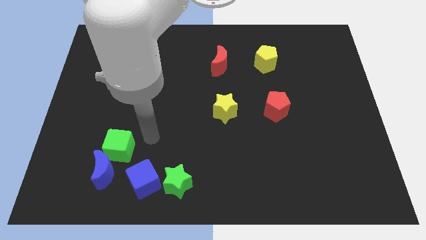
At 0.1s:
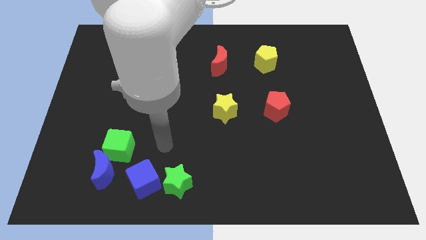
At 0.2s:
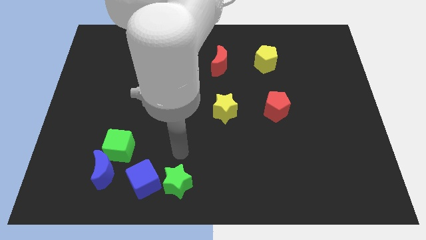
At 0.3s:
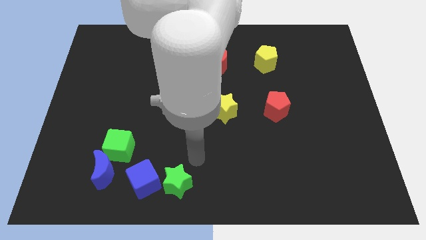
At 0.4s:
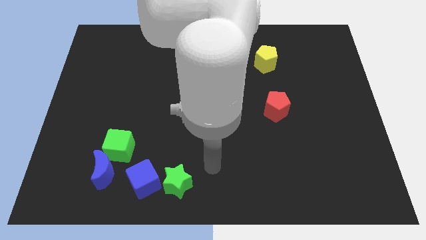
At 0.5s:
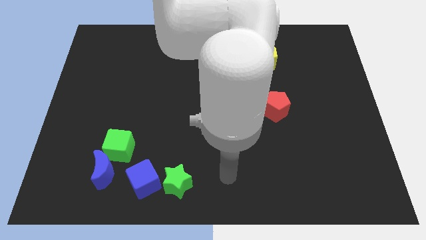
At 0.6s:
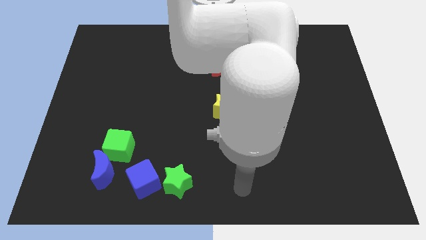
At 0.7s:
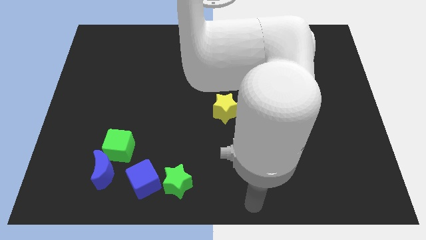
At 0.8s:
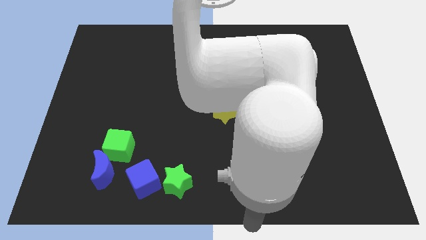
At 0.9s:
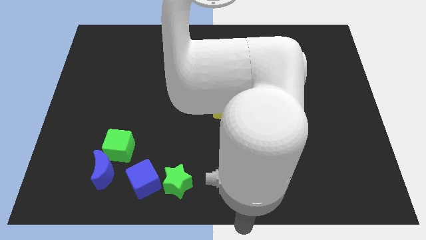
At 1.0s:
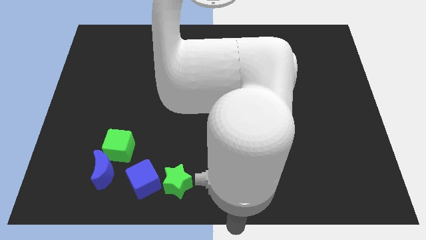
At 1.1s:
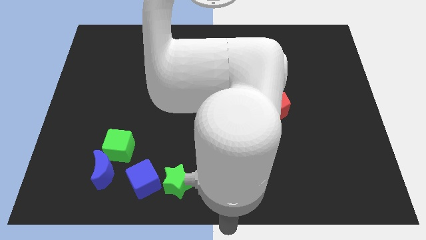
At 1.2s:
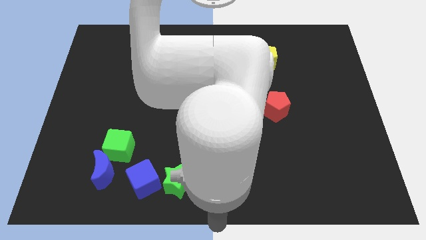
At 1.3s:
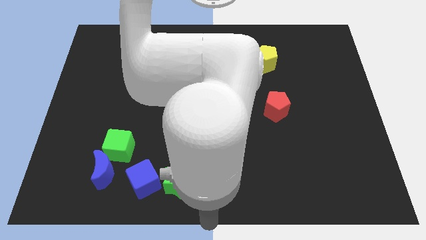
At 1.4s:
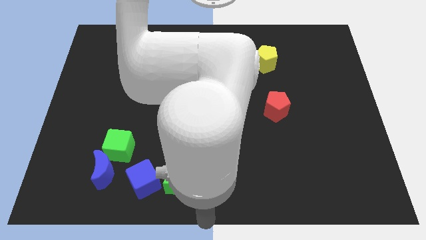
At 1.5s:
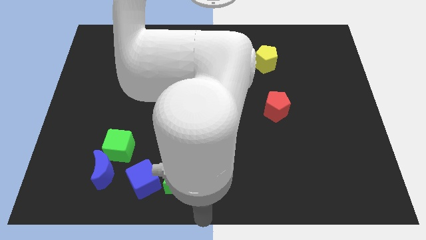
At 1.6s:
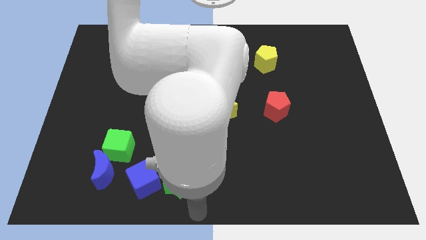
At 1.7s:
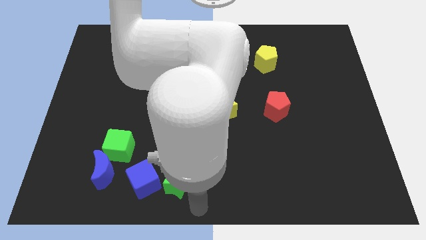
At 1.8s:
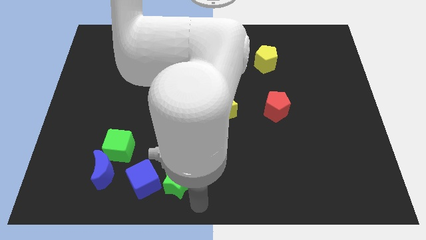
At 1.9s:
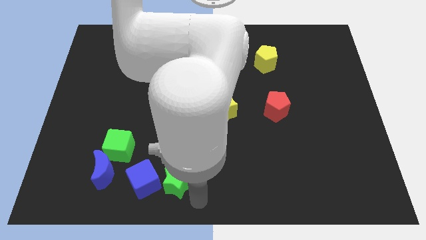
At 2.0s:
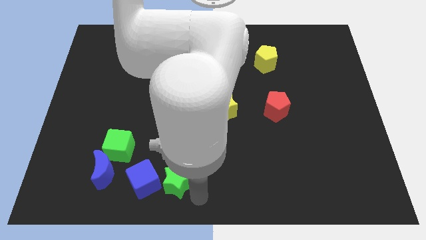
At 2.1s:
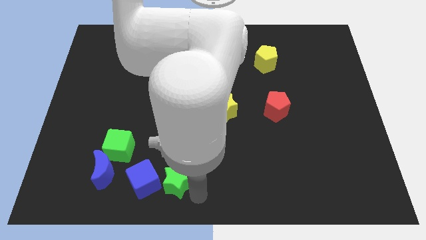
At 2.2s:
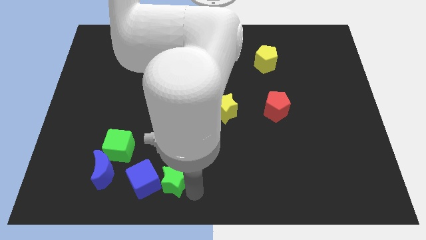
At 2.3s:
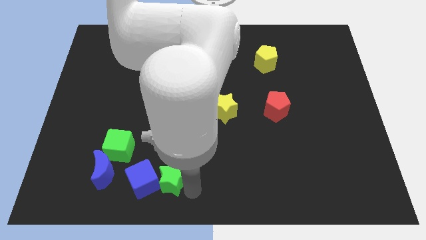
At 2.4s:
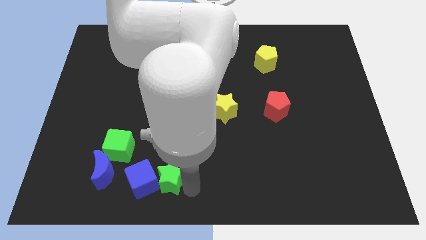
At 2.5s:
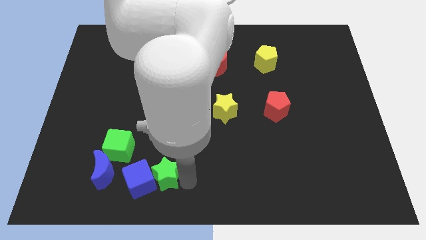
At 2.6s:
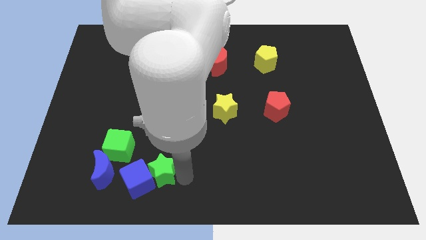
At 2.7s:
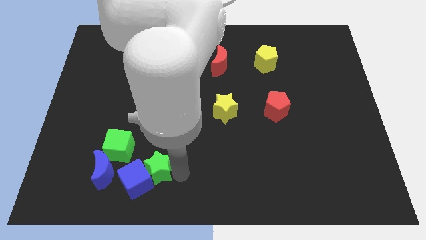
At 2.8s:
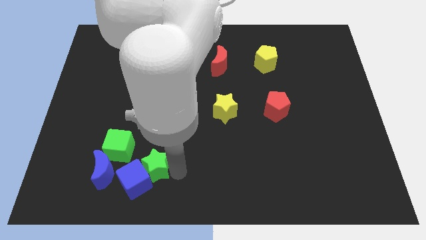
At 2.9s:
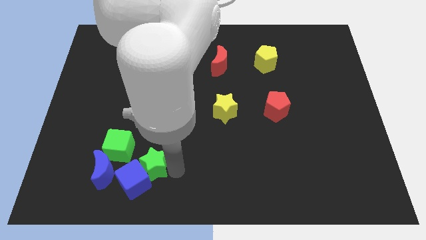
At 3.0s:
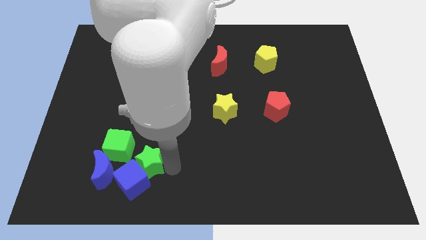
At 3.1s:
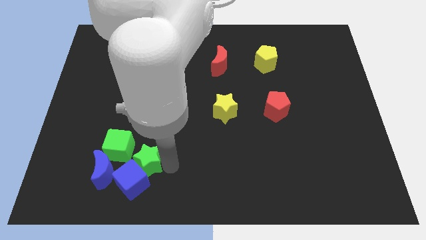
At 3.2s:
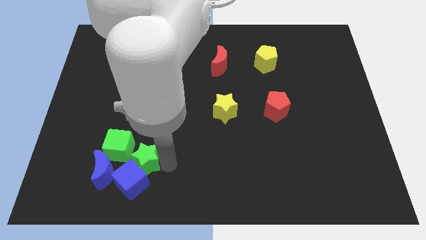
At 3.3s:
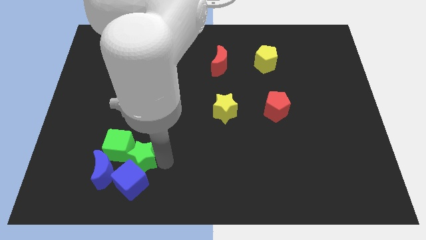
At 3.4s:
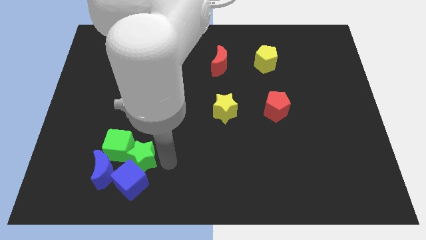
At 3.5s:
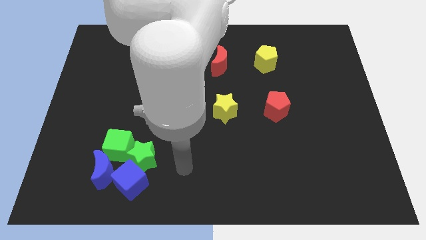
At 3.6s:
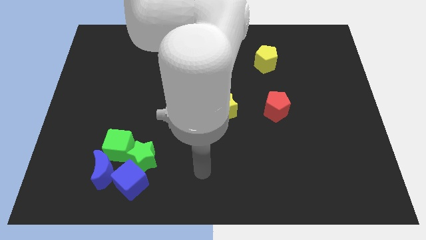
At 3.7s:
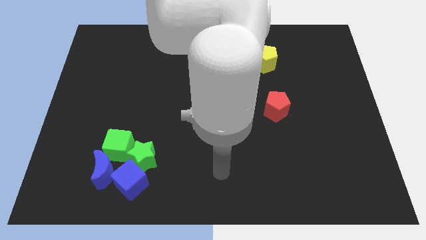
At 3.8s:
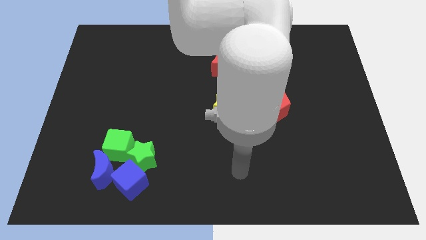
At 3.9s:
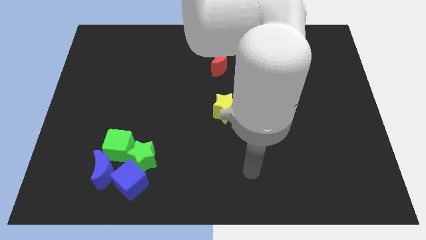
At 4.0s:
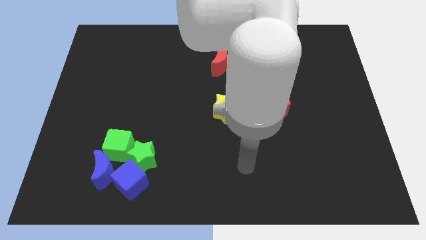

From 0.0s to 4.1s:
push the green star towards the group of blocks

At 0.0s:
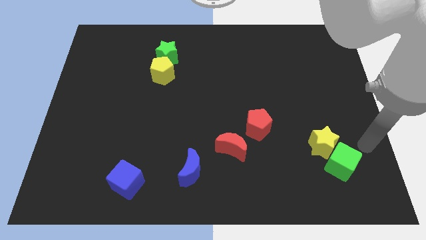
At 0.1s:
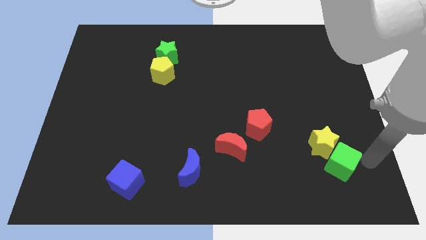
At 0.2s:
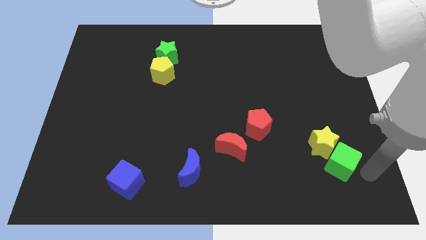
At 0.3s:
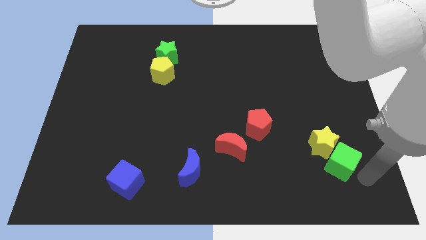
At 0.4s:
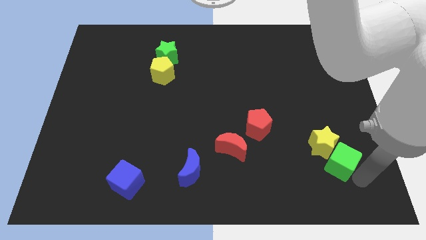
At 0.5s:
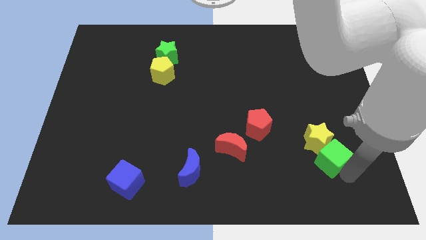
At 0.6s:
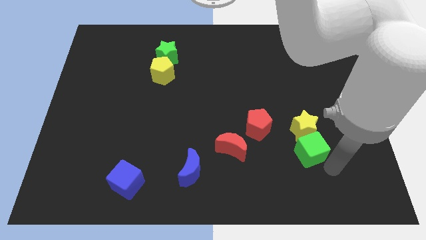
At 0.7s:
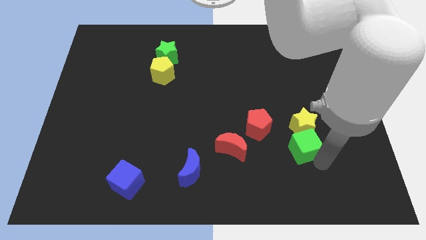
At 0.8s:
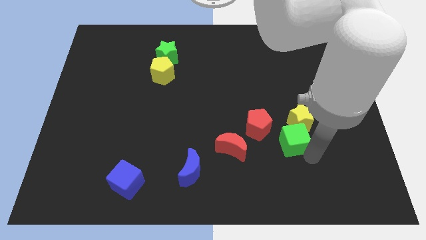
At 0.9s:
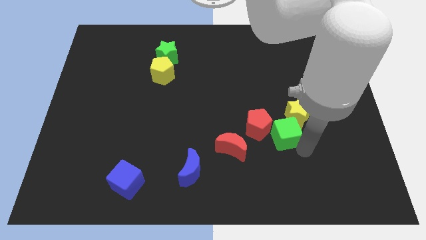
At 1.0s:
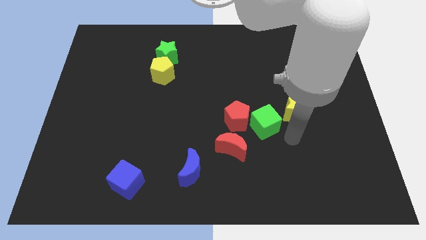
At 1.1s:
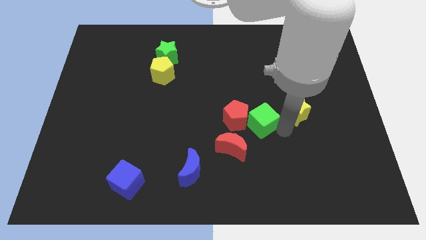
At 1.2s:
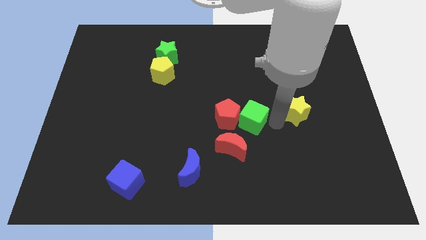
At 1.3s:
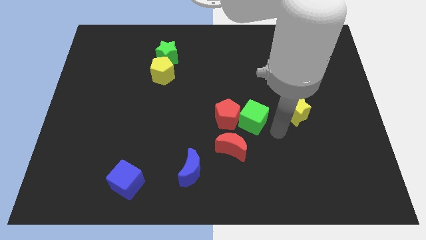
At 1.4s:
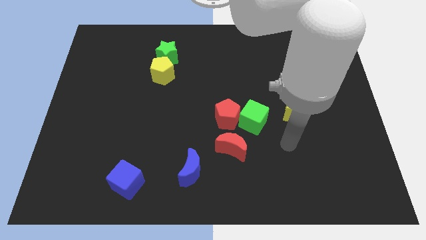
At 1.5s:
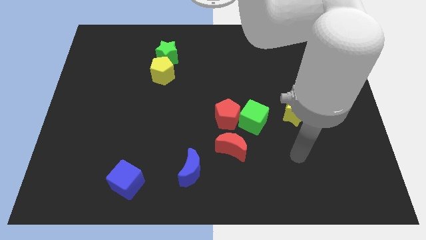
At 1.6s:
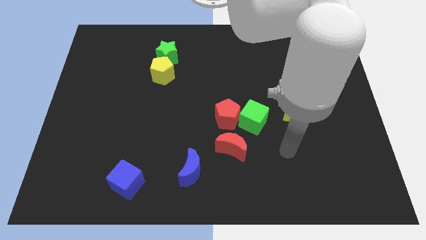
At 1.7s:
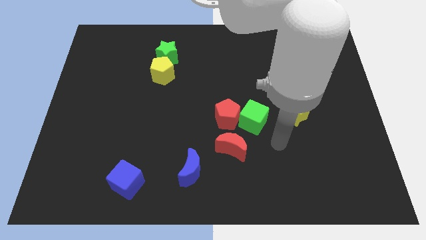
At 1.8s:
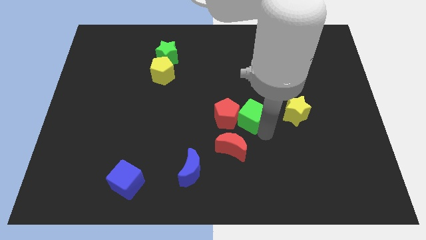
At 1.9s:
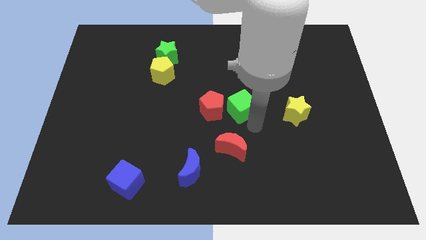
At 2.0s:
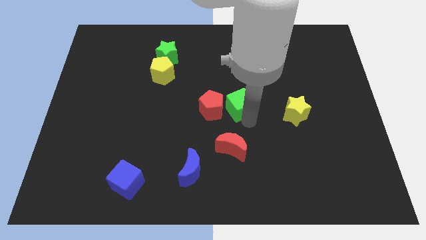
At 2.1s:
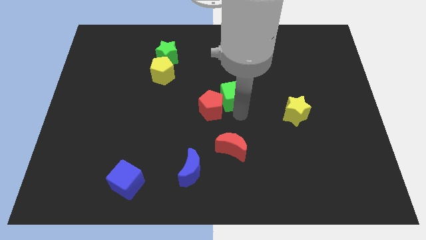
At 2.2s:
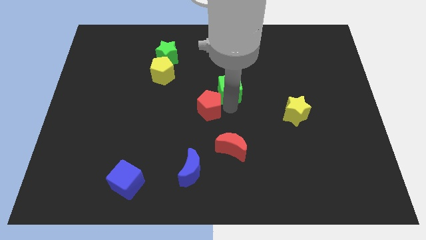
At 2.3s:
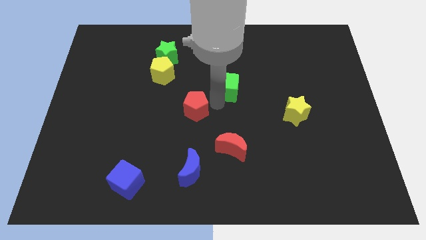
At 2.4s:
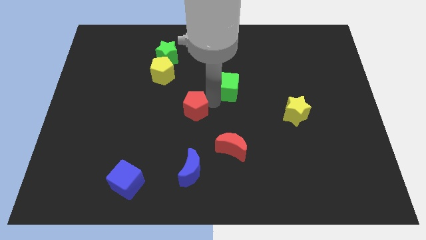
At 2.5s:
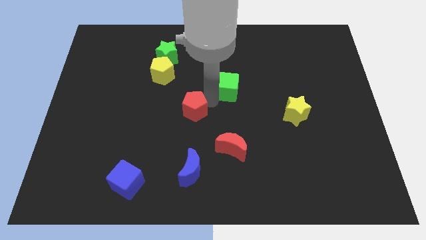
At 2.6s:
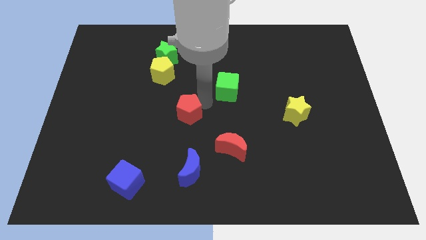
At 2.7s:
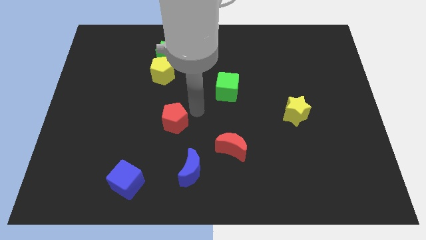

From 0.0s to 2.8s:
move the green cube diagonally to the top right of the red pentagon

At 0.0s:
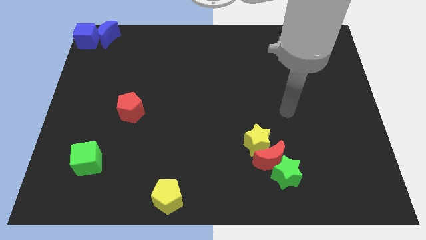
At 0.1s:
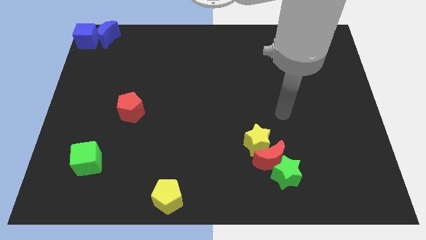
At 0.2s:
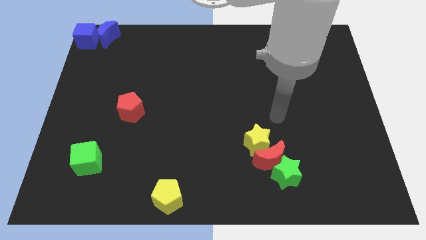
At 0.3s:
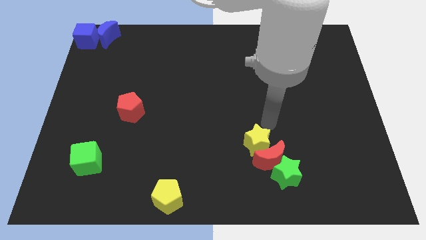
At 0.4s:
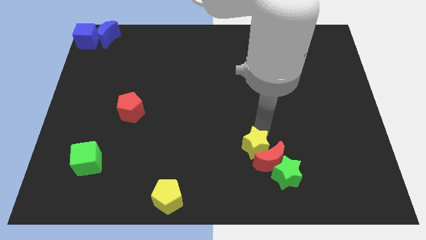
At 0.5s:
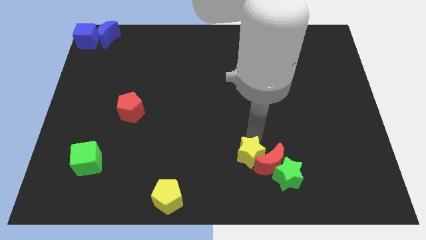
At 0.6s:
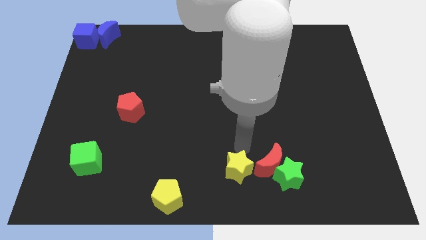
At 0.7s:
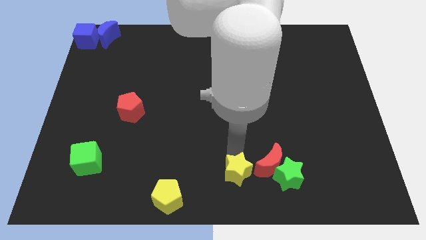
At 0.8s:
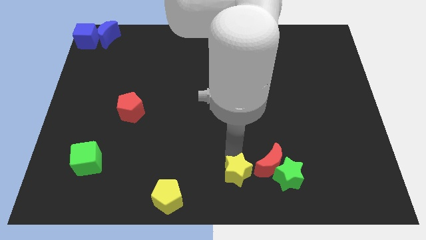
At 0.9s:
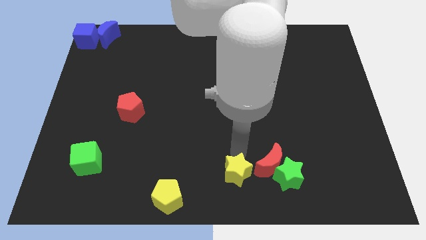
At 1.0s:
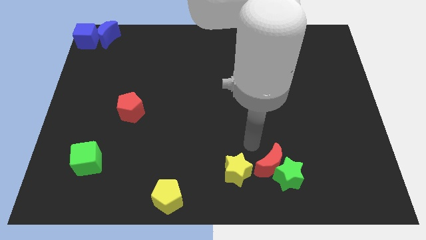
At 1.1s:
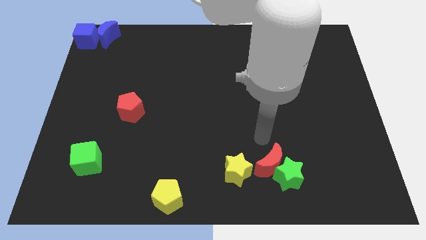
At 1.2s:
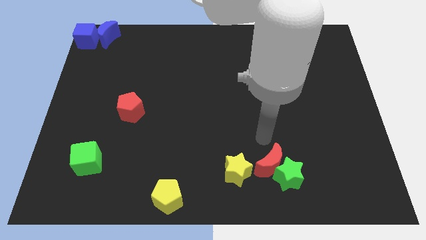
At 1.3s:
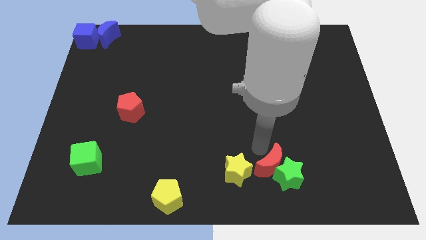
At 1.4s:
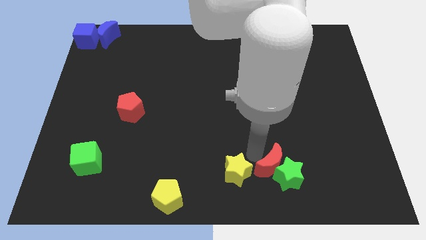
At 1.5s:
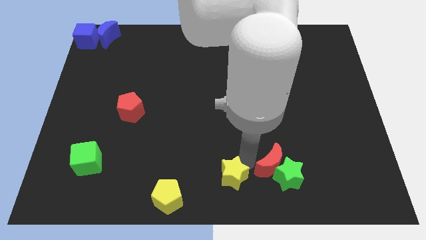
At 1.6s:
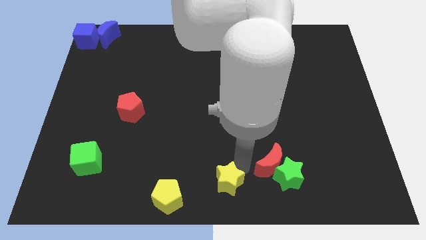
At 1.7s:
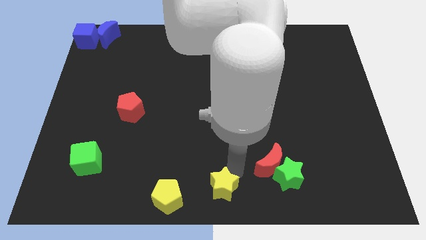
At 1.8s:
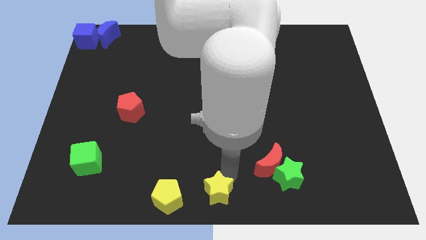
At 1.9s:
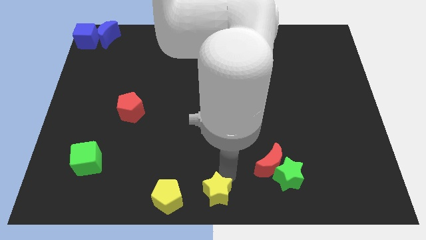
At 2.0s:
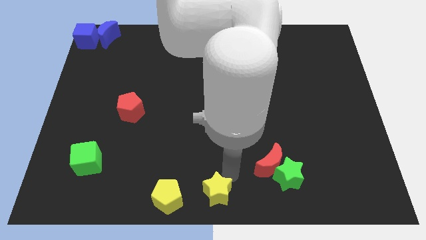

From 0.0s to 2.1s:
separate the yellow star from the red moon
